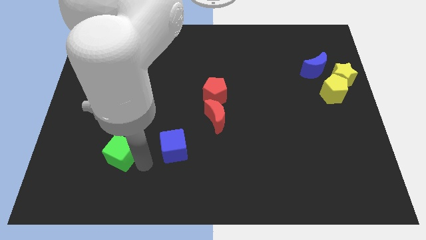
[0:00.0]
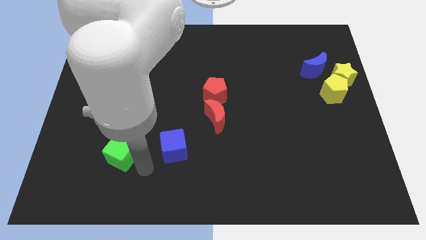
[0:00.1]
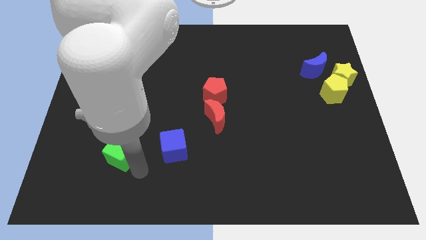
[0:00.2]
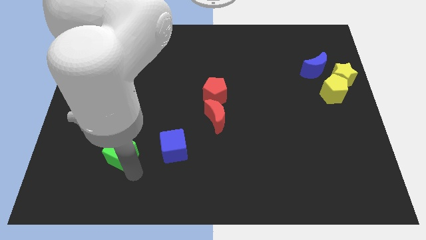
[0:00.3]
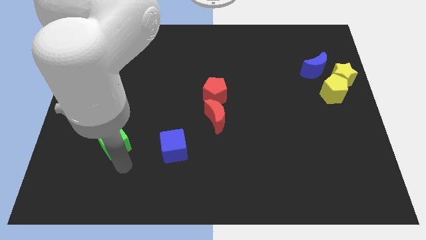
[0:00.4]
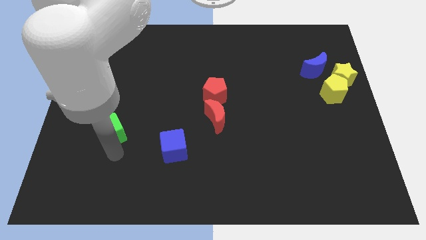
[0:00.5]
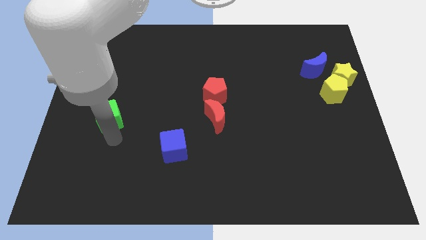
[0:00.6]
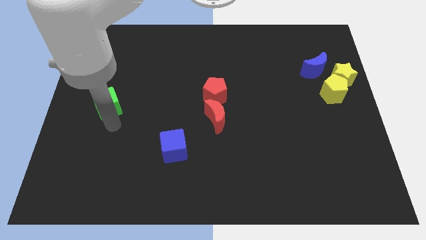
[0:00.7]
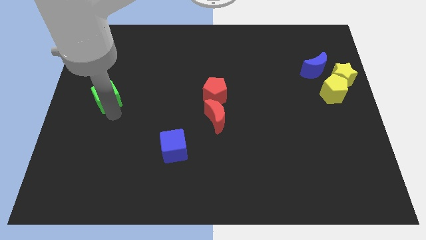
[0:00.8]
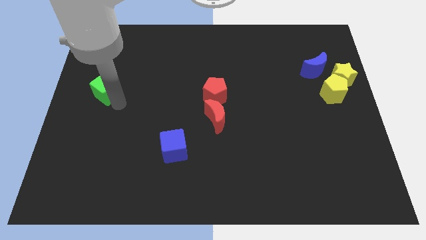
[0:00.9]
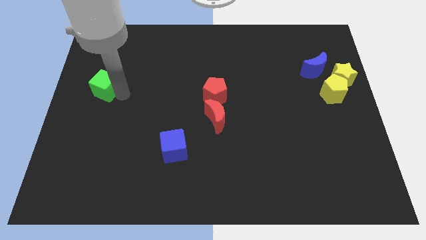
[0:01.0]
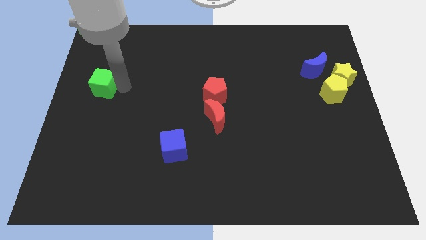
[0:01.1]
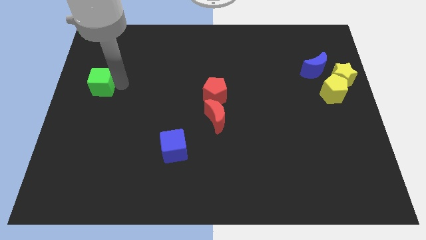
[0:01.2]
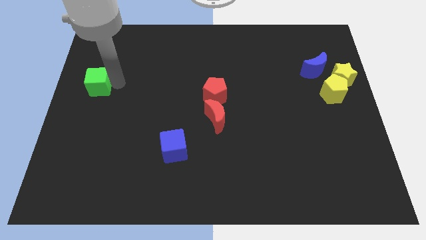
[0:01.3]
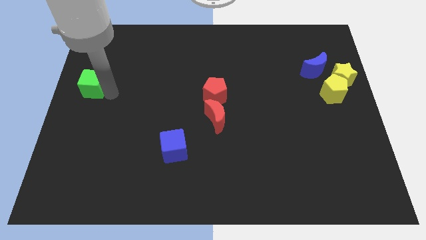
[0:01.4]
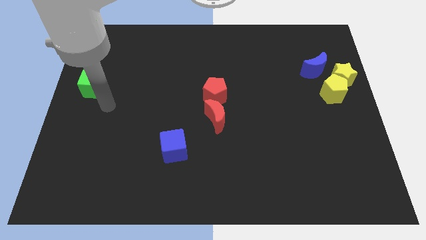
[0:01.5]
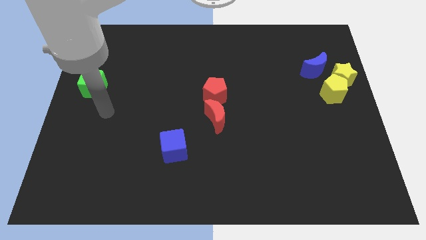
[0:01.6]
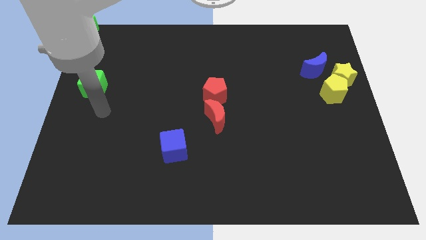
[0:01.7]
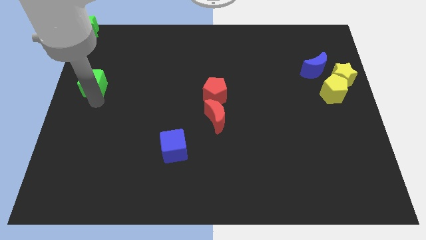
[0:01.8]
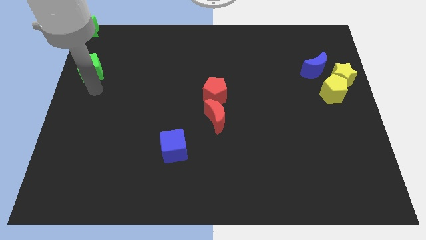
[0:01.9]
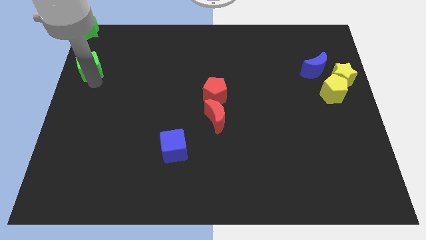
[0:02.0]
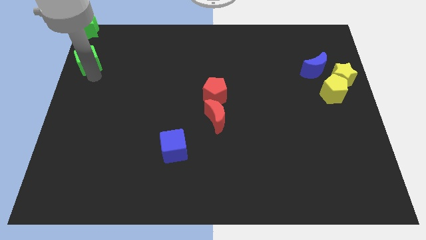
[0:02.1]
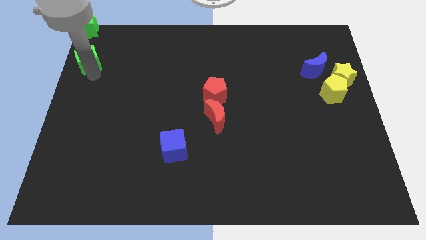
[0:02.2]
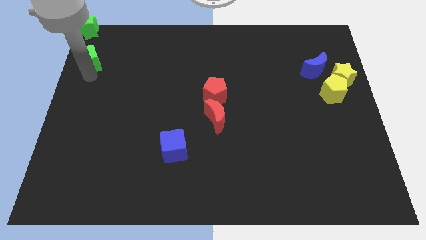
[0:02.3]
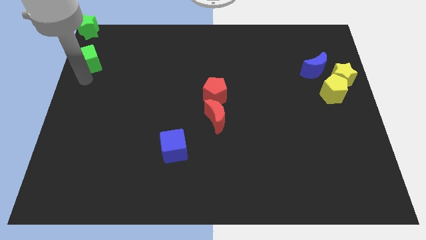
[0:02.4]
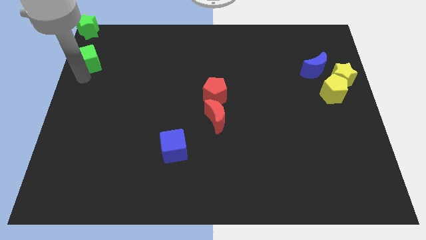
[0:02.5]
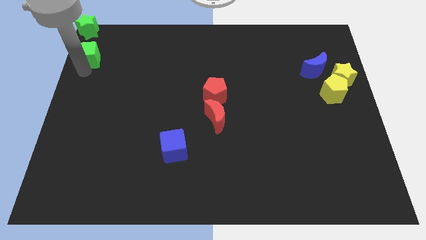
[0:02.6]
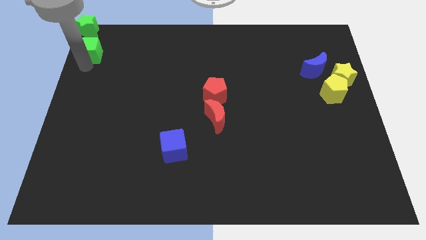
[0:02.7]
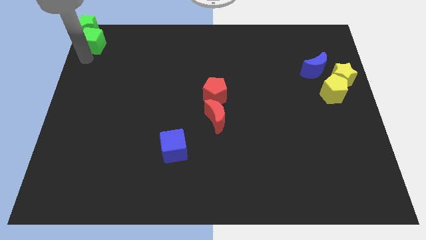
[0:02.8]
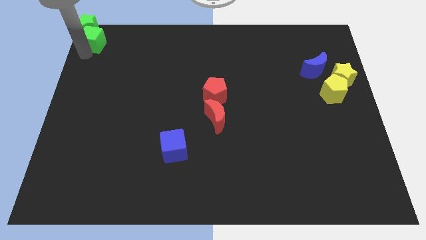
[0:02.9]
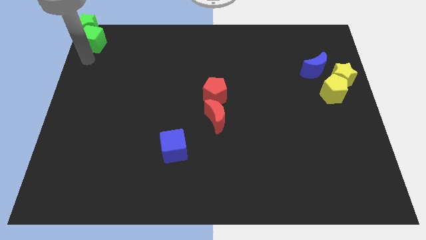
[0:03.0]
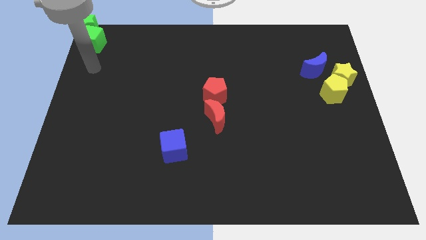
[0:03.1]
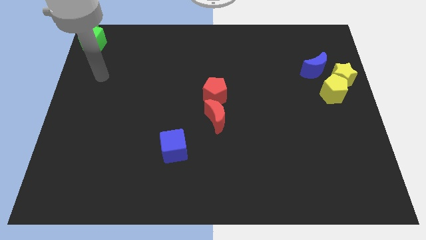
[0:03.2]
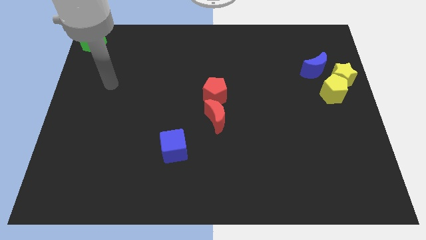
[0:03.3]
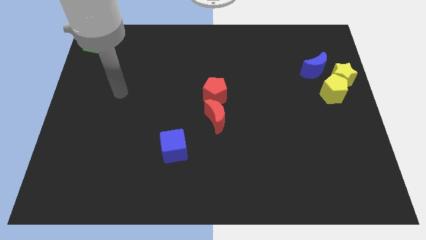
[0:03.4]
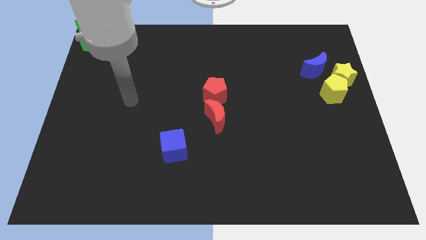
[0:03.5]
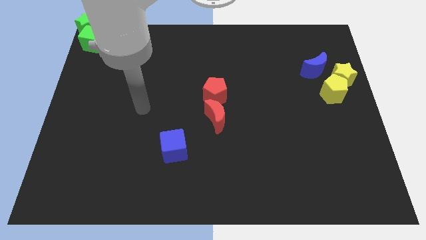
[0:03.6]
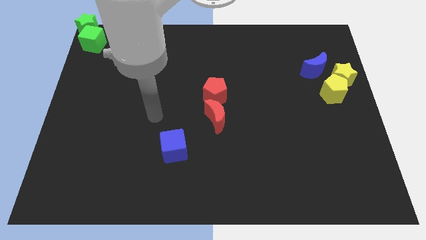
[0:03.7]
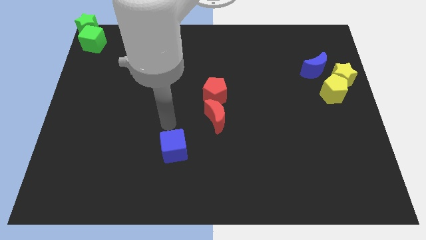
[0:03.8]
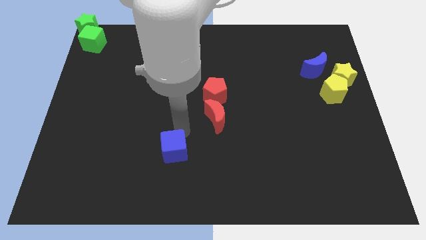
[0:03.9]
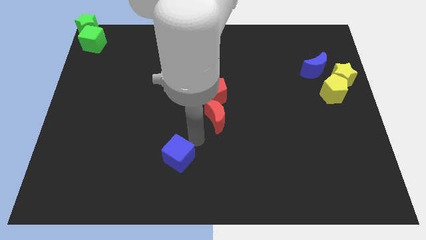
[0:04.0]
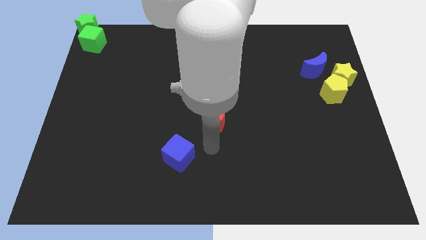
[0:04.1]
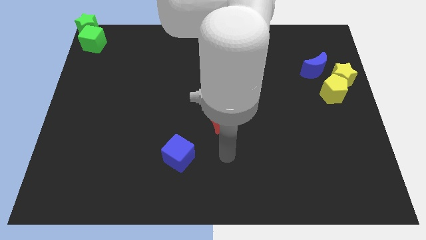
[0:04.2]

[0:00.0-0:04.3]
move the green cube to the bottom of the green star

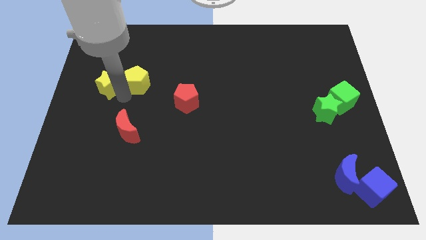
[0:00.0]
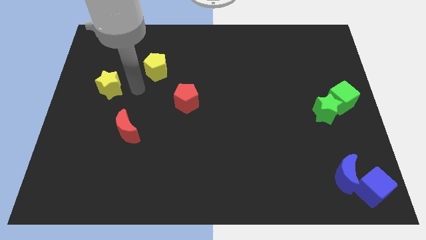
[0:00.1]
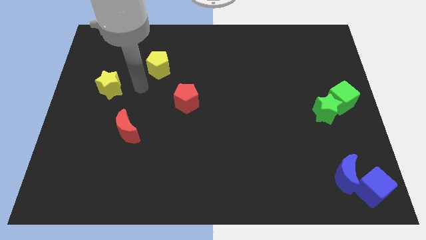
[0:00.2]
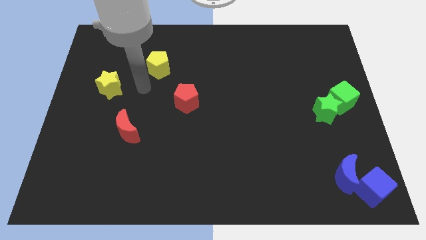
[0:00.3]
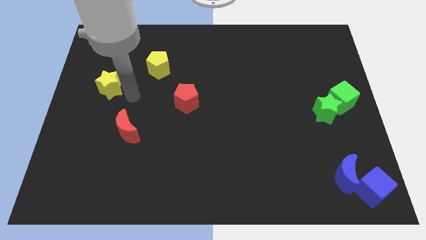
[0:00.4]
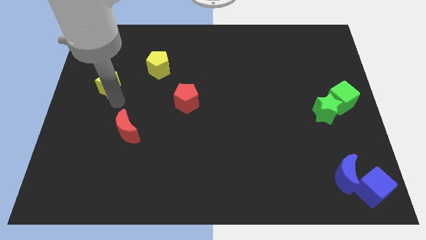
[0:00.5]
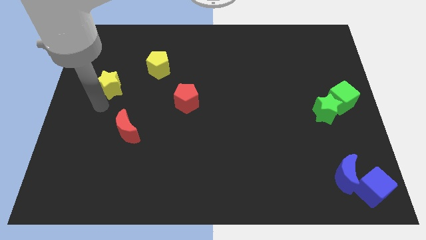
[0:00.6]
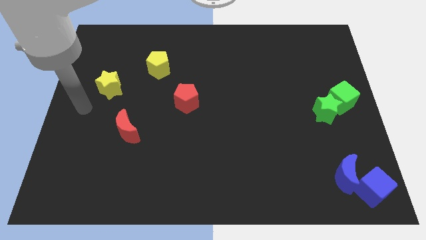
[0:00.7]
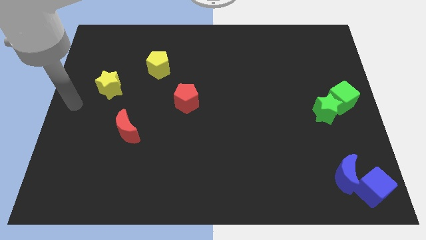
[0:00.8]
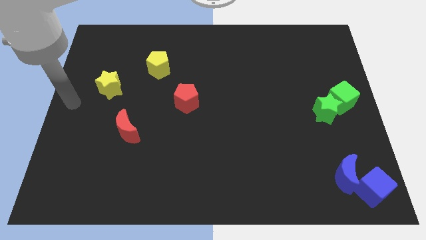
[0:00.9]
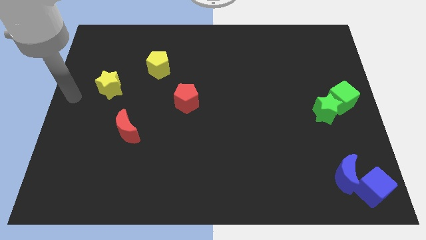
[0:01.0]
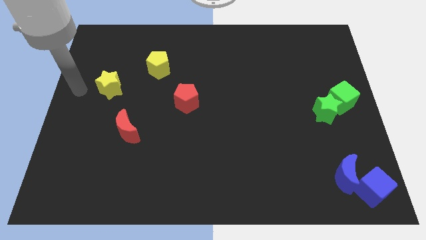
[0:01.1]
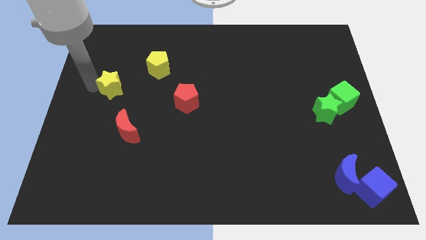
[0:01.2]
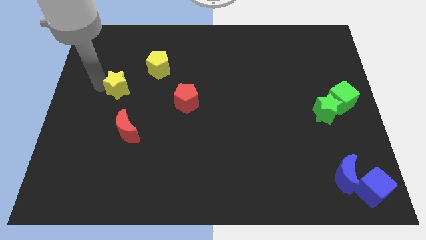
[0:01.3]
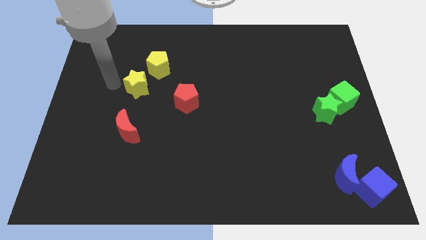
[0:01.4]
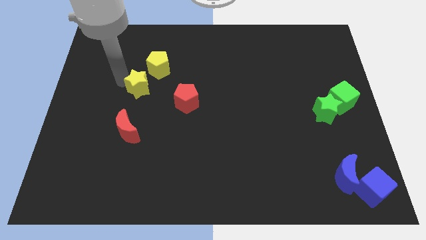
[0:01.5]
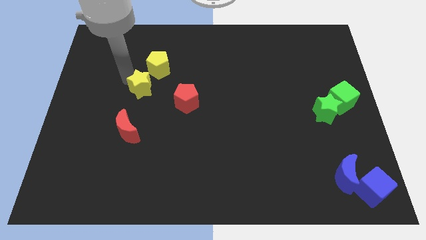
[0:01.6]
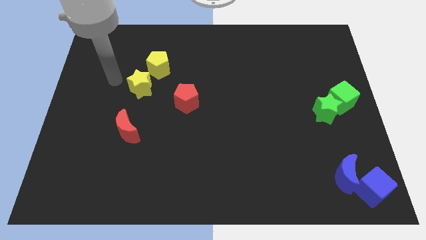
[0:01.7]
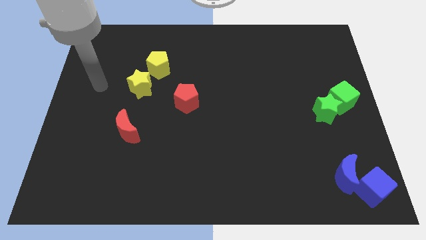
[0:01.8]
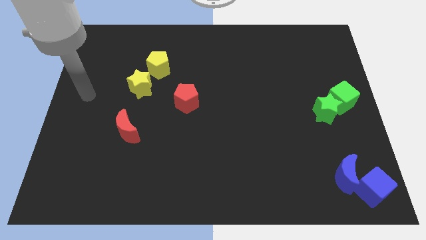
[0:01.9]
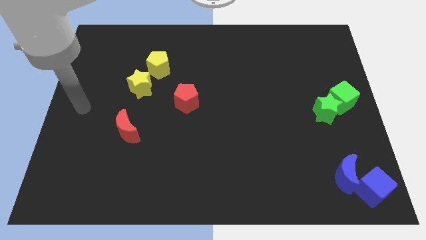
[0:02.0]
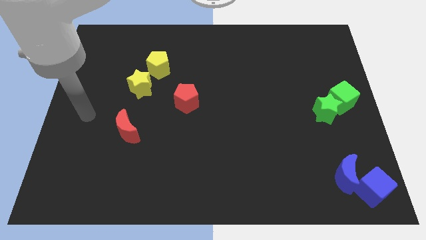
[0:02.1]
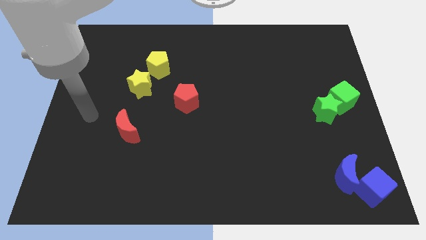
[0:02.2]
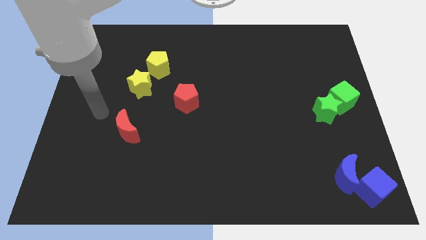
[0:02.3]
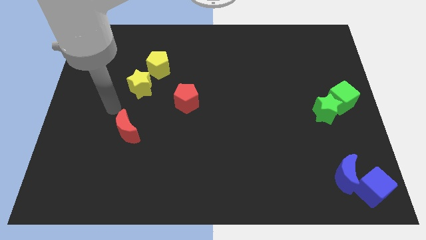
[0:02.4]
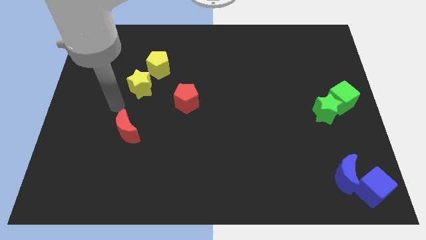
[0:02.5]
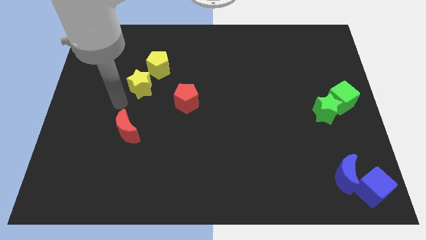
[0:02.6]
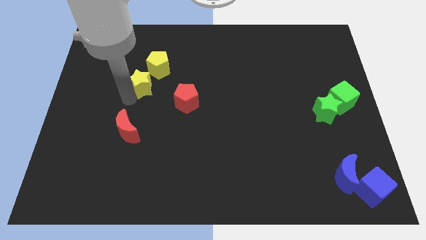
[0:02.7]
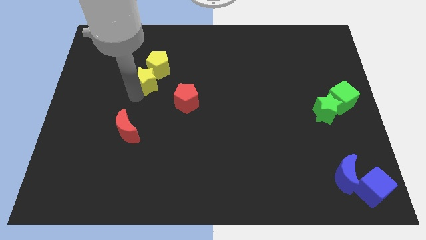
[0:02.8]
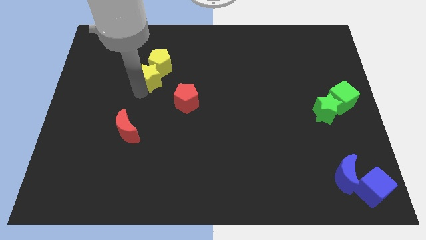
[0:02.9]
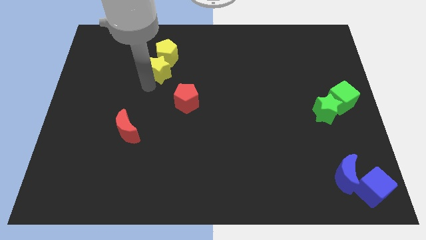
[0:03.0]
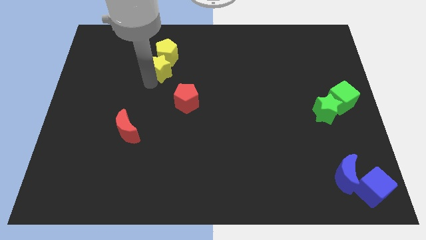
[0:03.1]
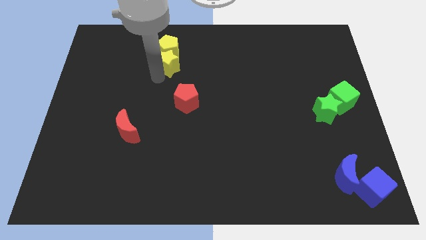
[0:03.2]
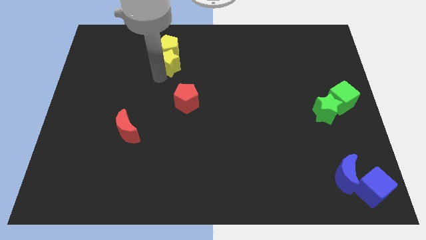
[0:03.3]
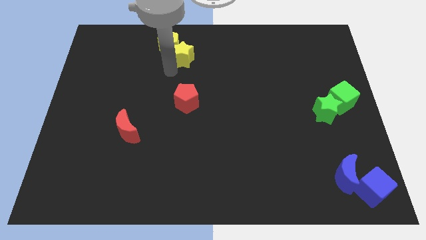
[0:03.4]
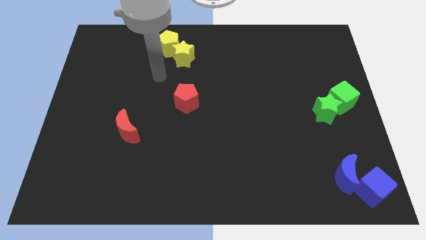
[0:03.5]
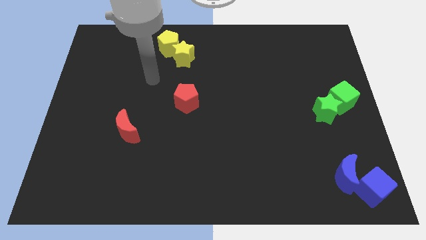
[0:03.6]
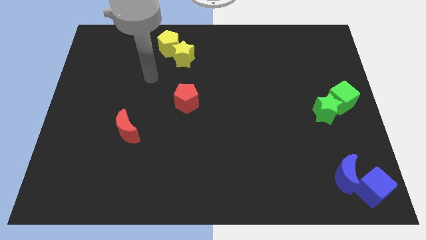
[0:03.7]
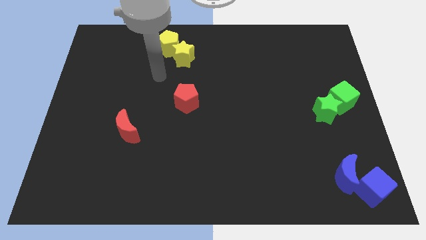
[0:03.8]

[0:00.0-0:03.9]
move the yellow star and yellow pentagon towards the top center of the board

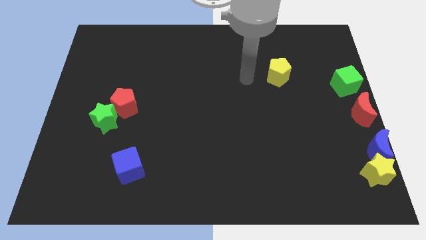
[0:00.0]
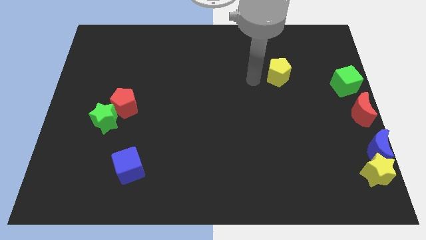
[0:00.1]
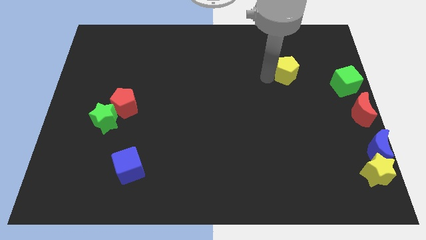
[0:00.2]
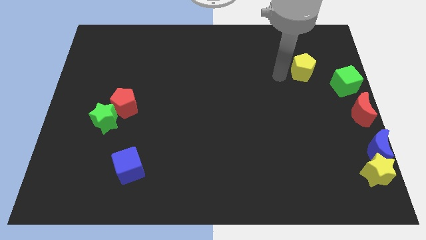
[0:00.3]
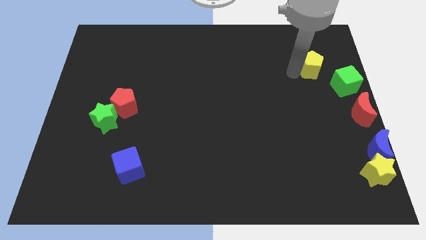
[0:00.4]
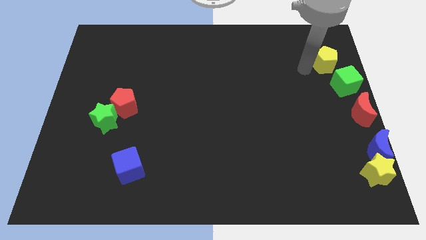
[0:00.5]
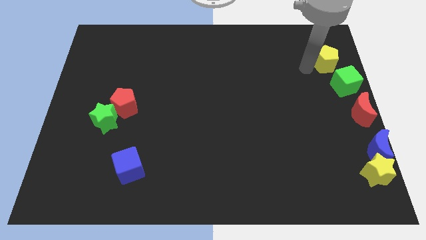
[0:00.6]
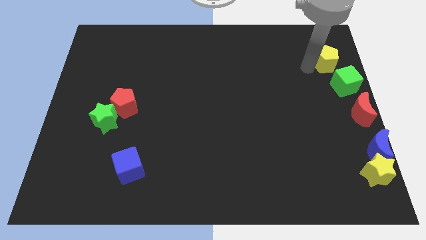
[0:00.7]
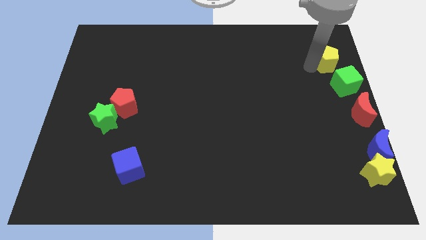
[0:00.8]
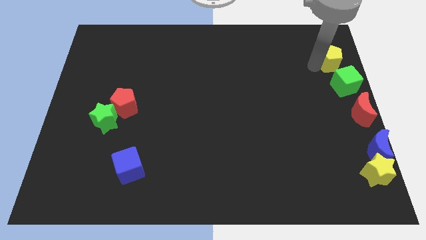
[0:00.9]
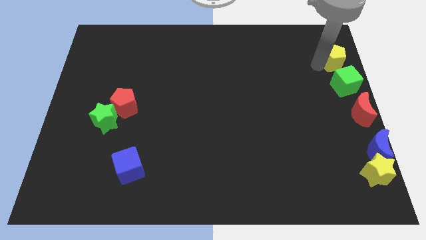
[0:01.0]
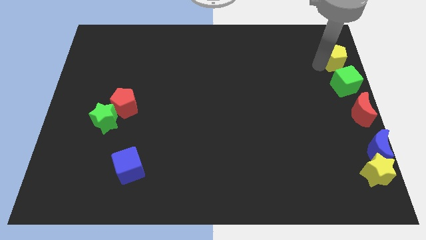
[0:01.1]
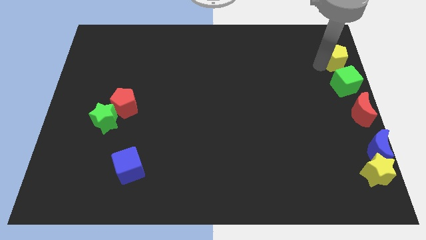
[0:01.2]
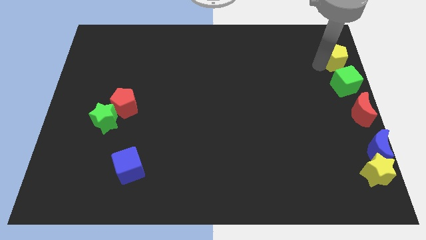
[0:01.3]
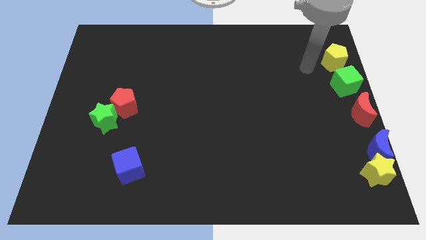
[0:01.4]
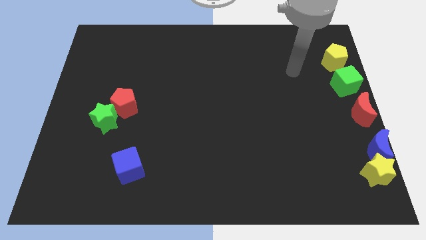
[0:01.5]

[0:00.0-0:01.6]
place the yellow pentagon above the green cube
